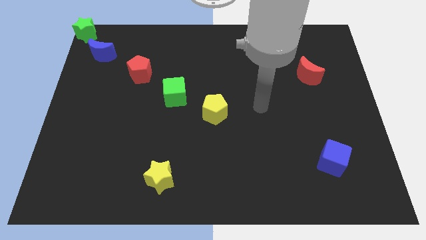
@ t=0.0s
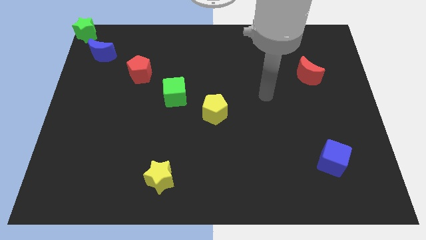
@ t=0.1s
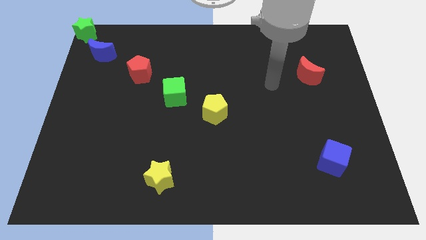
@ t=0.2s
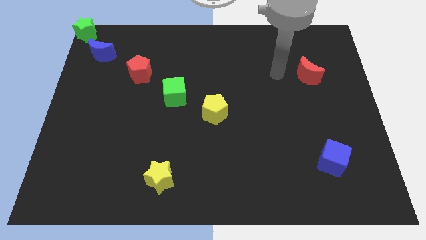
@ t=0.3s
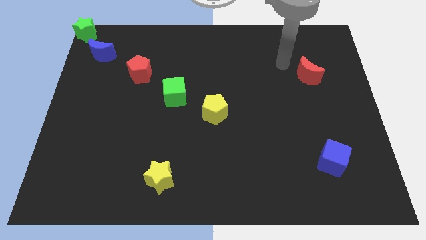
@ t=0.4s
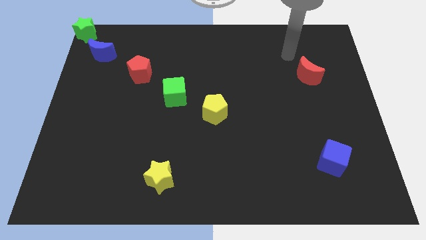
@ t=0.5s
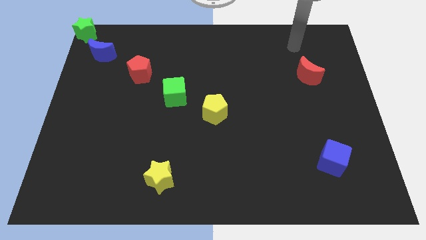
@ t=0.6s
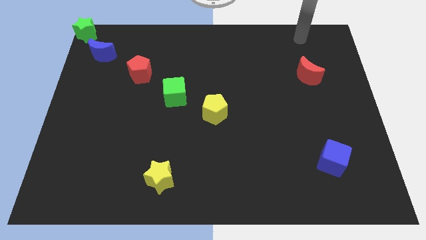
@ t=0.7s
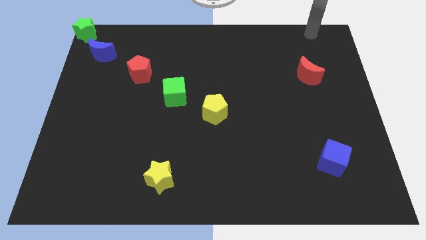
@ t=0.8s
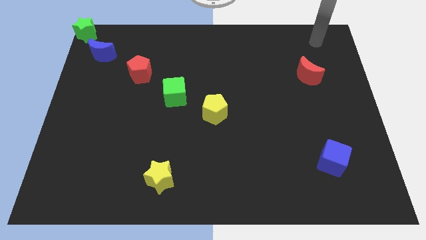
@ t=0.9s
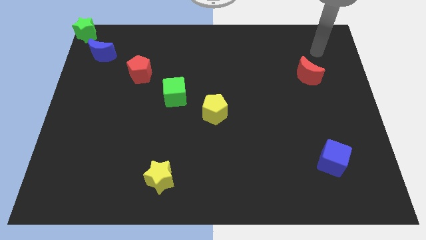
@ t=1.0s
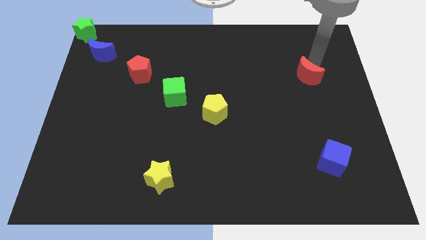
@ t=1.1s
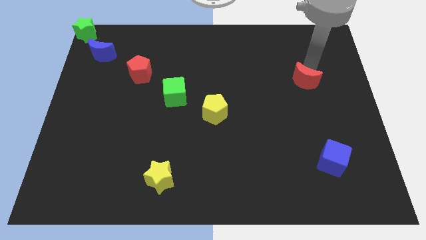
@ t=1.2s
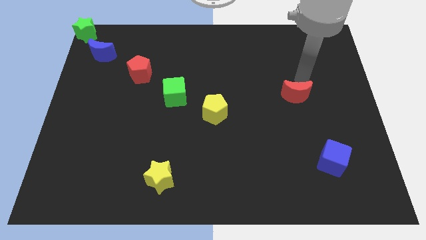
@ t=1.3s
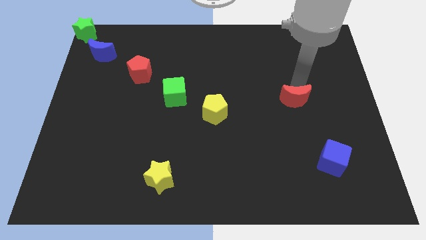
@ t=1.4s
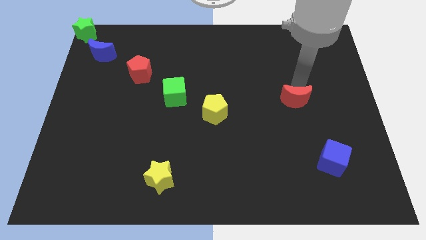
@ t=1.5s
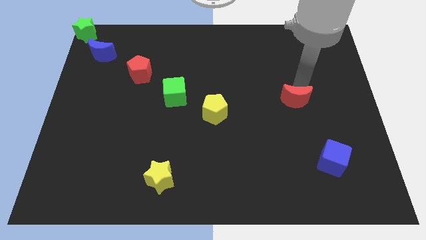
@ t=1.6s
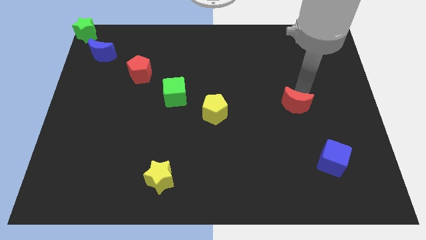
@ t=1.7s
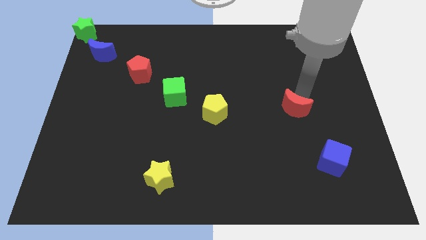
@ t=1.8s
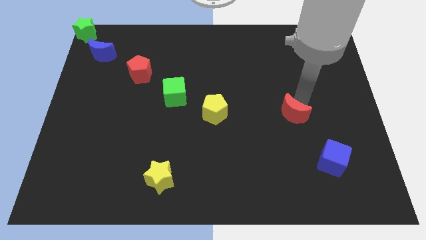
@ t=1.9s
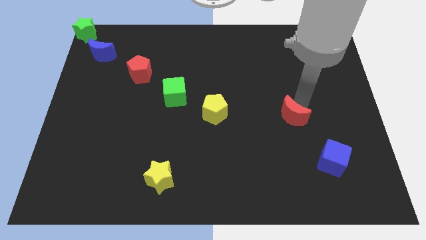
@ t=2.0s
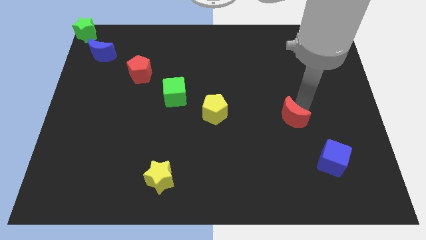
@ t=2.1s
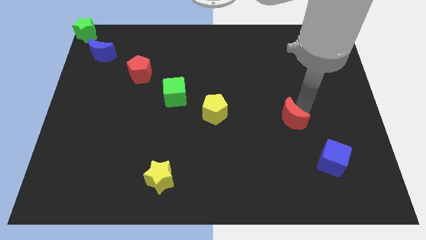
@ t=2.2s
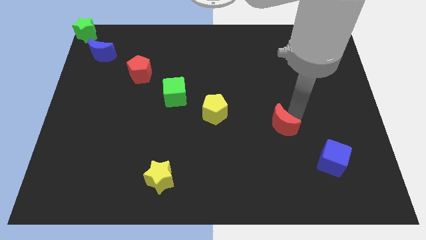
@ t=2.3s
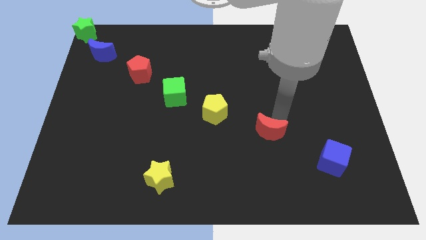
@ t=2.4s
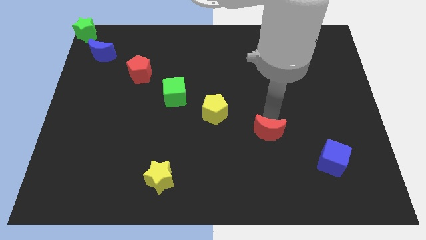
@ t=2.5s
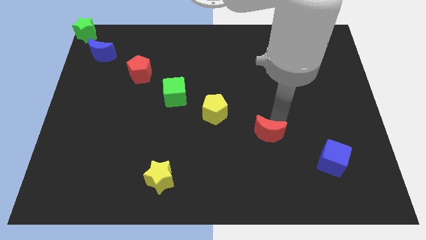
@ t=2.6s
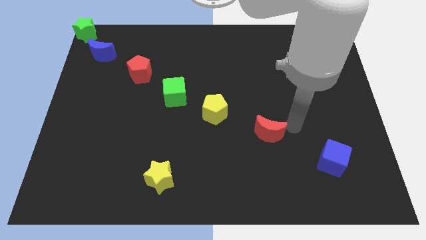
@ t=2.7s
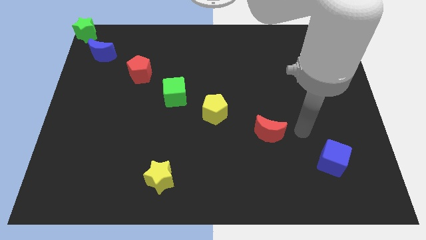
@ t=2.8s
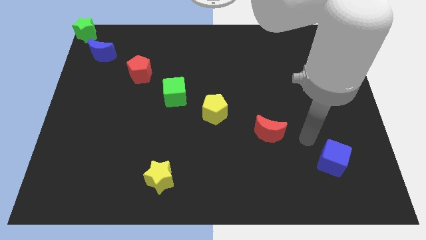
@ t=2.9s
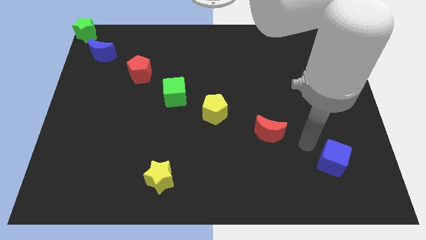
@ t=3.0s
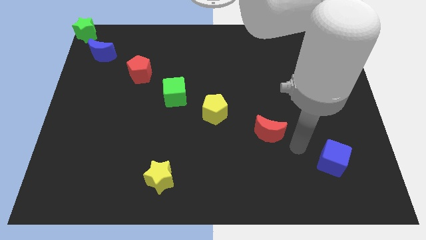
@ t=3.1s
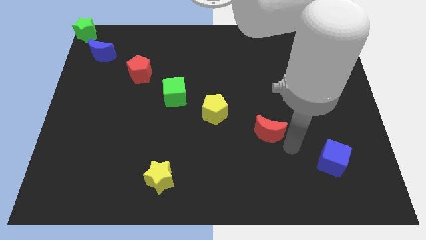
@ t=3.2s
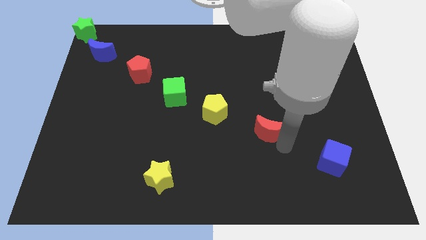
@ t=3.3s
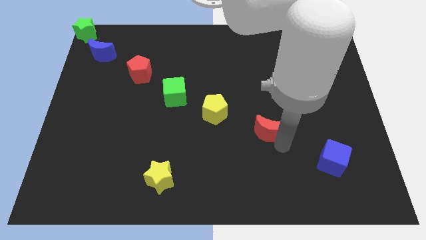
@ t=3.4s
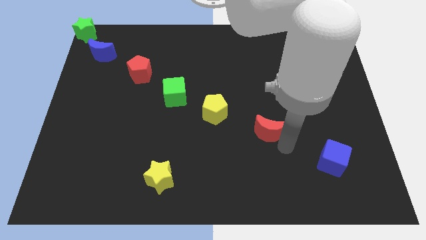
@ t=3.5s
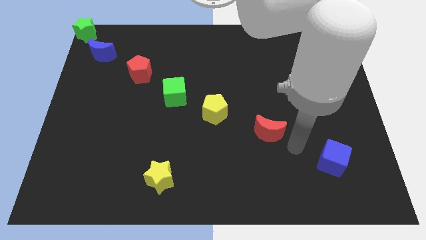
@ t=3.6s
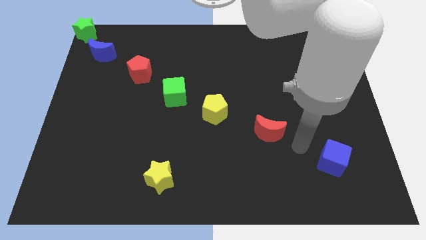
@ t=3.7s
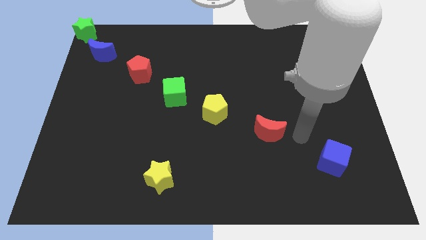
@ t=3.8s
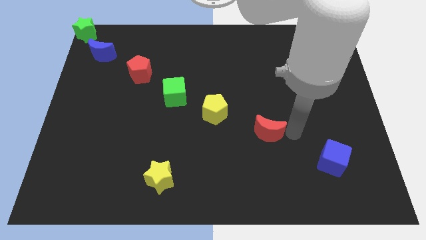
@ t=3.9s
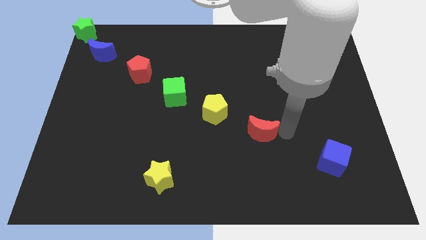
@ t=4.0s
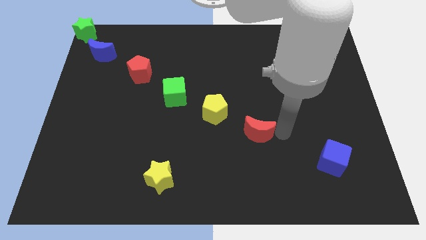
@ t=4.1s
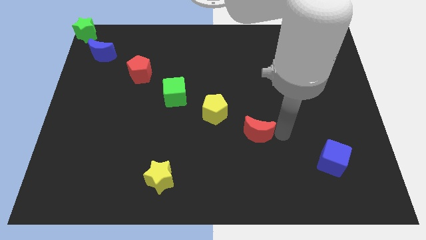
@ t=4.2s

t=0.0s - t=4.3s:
move the red crescent to the bottom right of the yellow pentagon

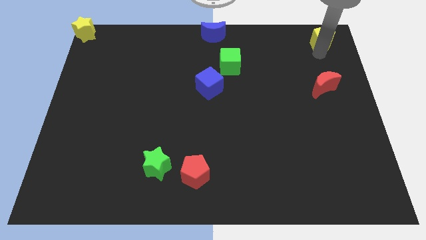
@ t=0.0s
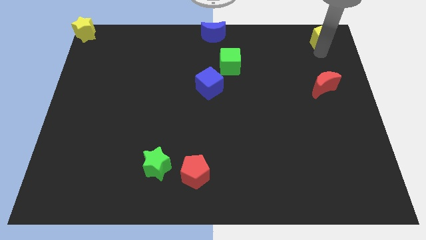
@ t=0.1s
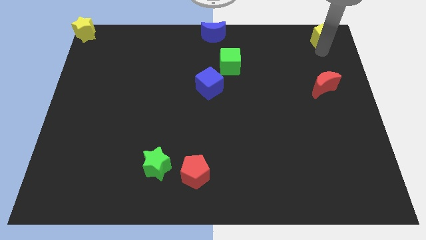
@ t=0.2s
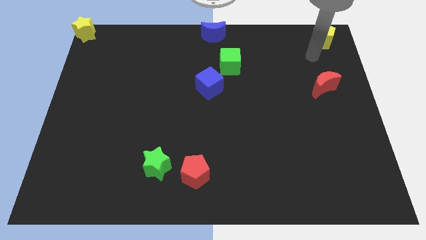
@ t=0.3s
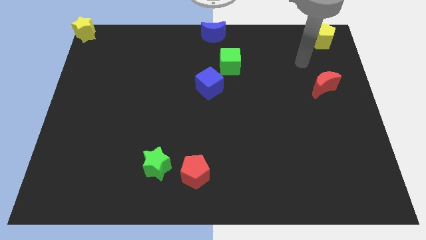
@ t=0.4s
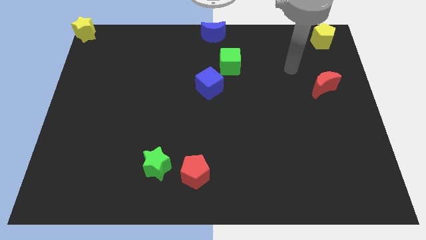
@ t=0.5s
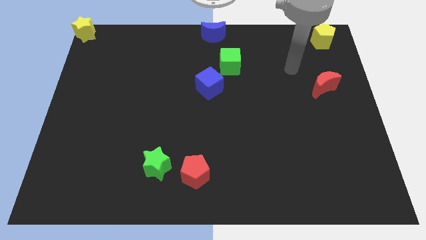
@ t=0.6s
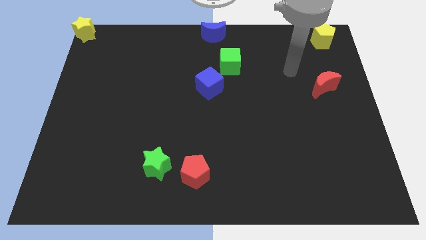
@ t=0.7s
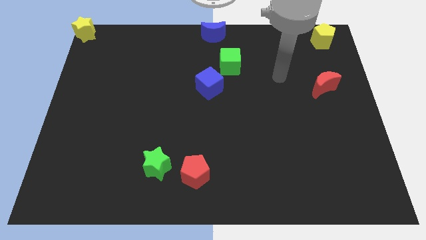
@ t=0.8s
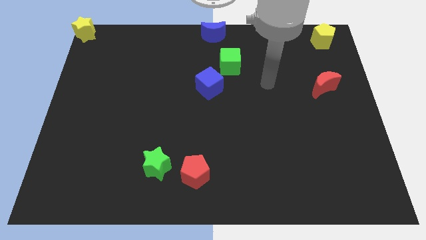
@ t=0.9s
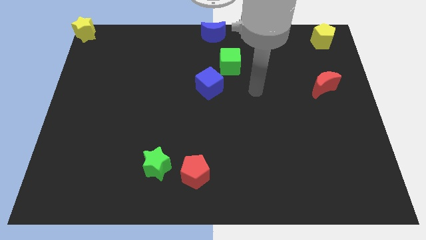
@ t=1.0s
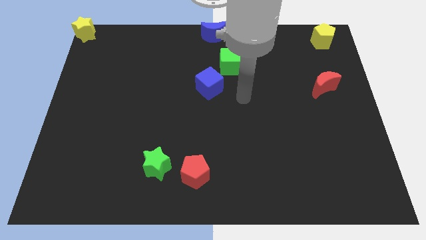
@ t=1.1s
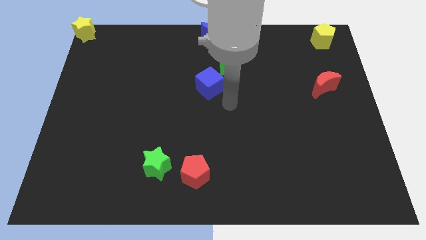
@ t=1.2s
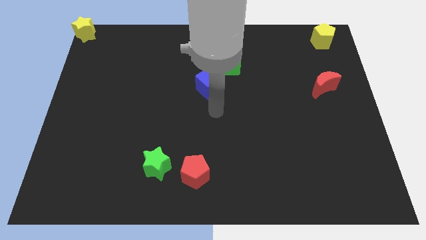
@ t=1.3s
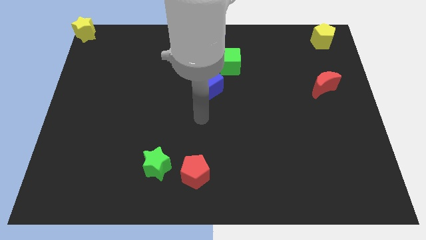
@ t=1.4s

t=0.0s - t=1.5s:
go away from the yellow pentagon

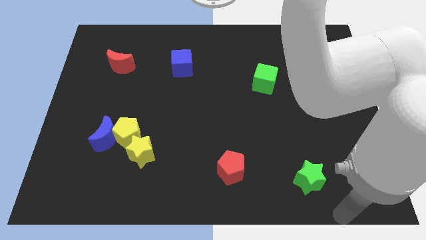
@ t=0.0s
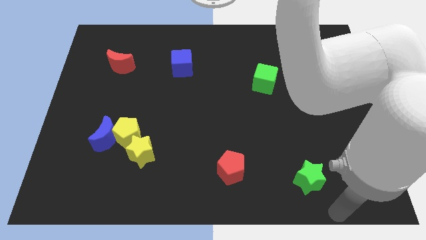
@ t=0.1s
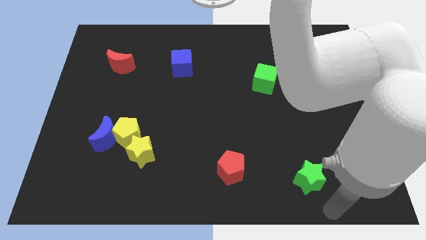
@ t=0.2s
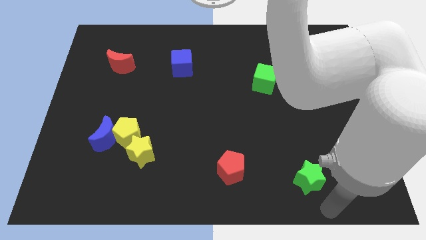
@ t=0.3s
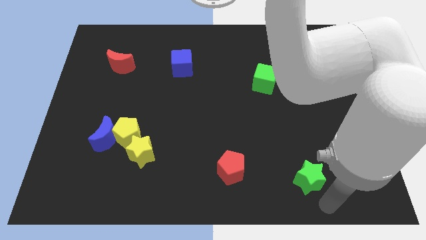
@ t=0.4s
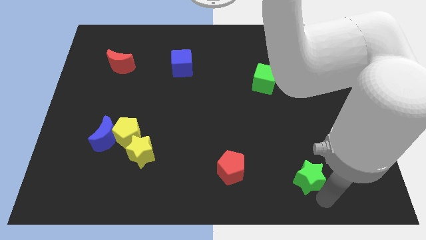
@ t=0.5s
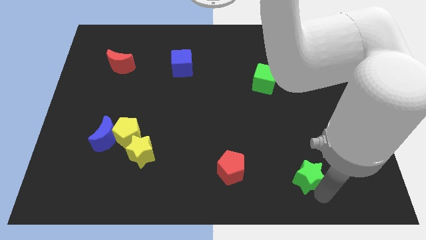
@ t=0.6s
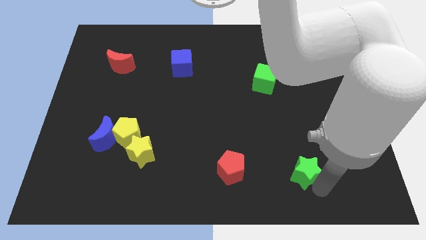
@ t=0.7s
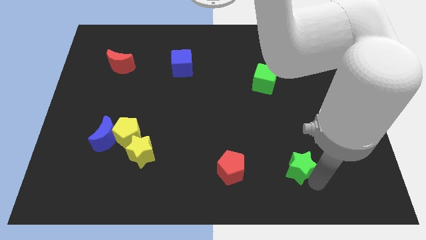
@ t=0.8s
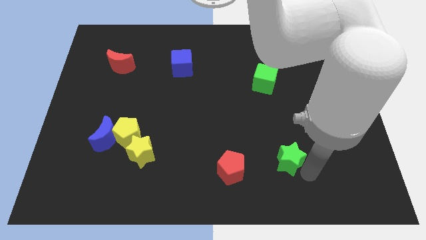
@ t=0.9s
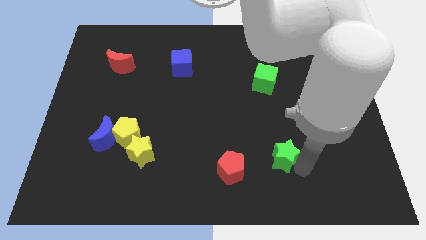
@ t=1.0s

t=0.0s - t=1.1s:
move green star diagonally towards top side

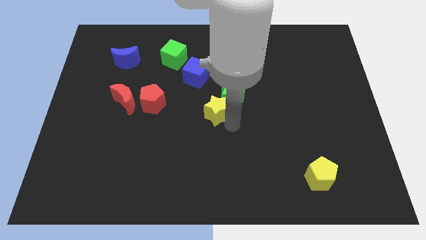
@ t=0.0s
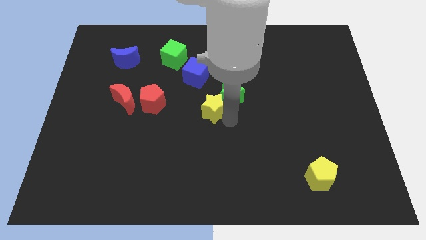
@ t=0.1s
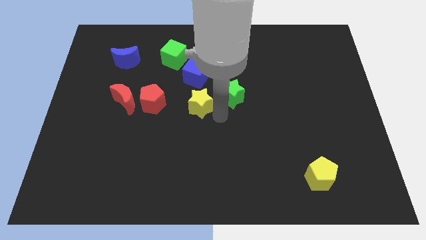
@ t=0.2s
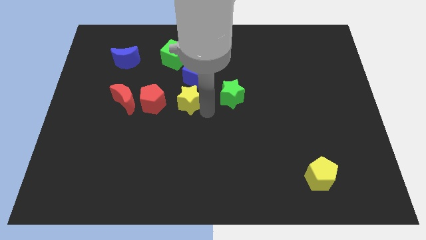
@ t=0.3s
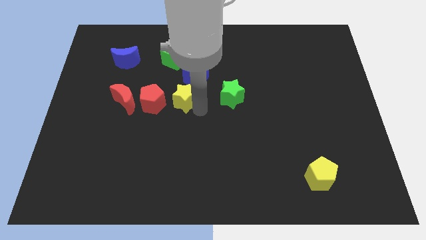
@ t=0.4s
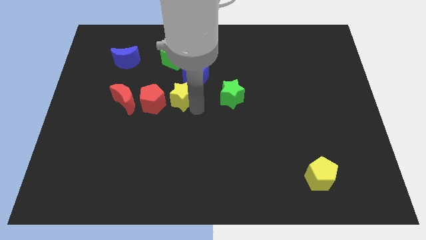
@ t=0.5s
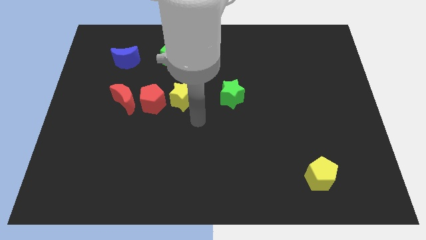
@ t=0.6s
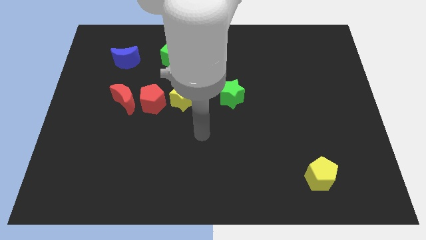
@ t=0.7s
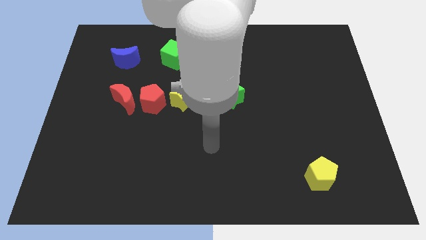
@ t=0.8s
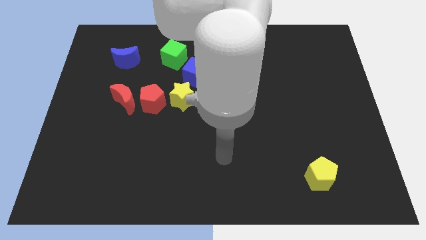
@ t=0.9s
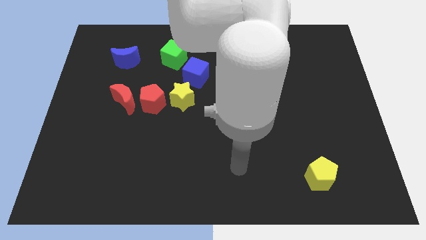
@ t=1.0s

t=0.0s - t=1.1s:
place yellow star to the right of red pentagon

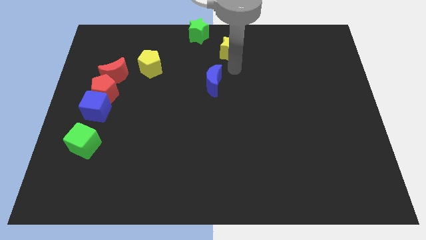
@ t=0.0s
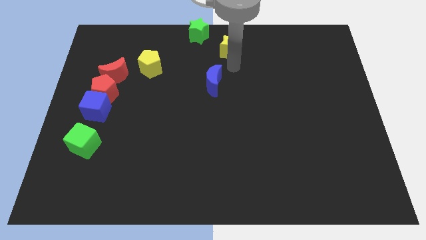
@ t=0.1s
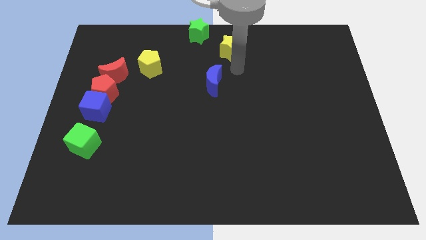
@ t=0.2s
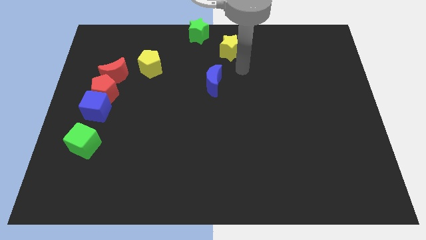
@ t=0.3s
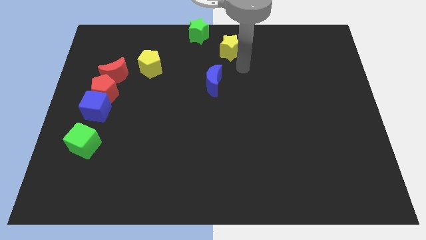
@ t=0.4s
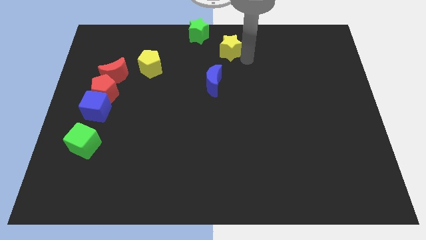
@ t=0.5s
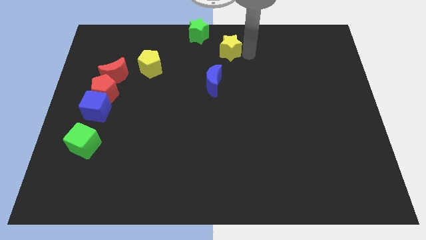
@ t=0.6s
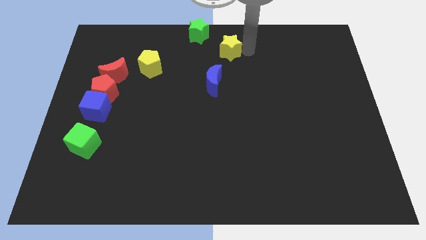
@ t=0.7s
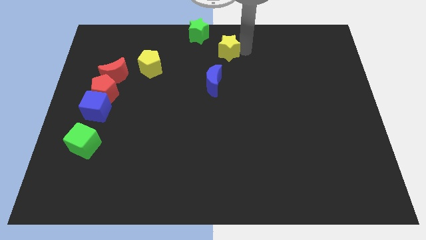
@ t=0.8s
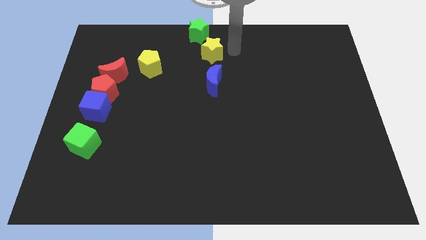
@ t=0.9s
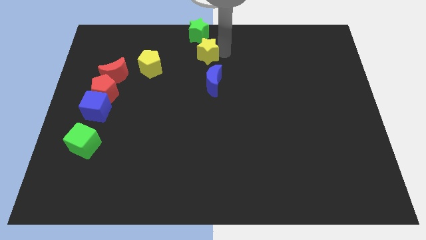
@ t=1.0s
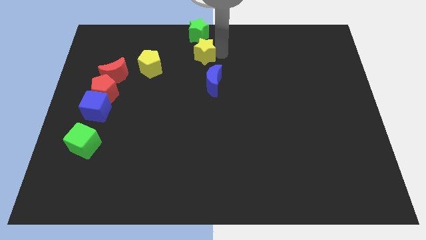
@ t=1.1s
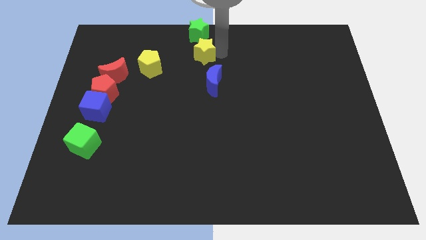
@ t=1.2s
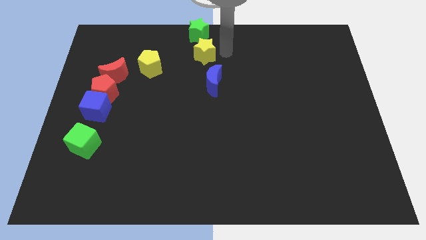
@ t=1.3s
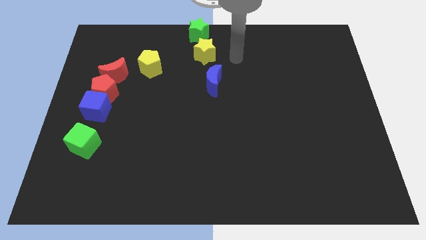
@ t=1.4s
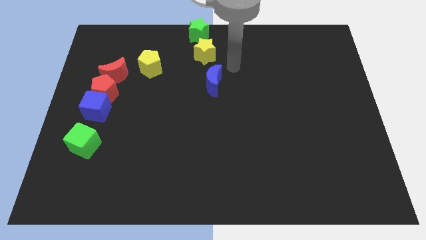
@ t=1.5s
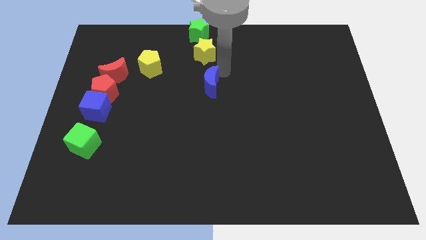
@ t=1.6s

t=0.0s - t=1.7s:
move the yellow star under to the green star
